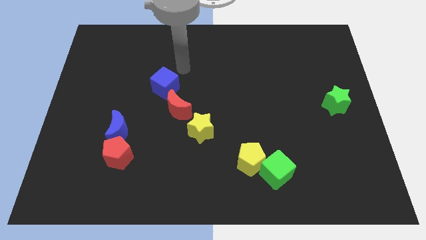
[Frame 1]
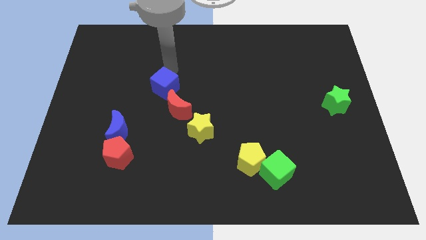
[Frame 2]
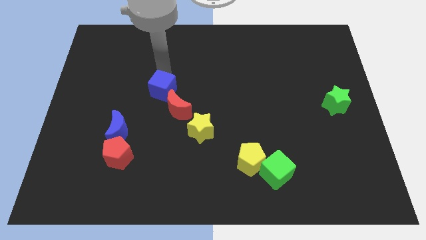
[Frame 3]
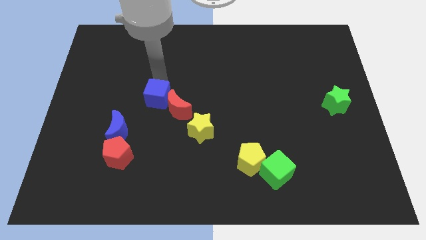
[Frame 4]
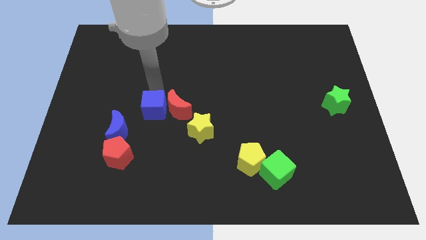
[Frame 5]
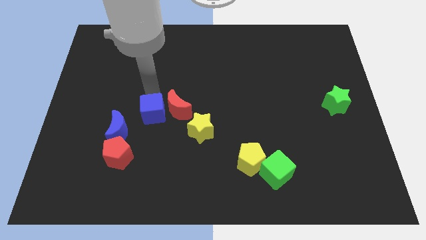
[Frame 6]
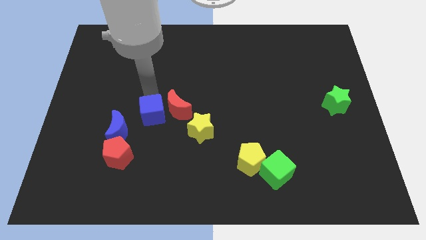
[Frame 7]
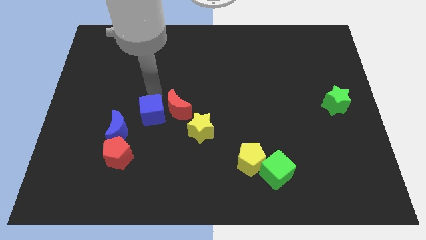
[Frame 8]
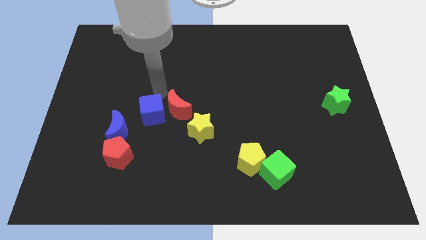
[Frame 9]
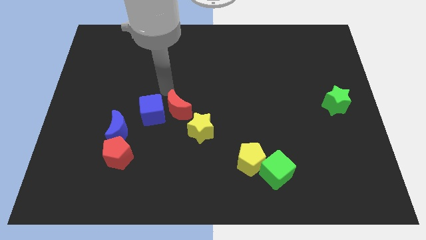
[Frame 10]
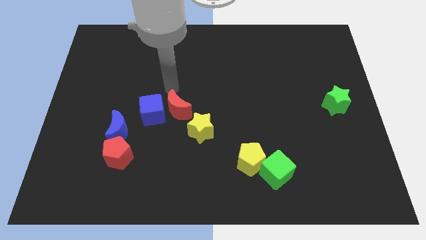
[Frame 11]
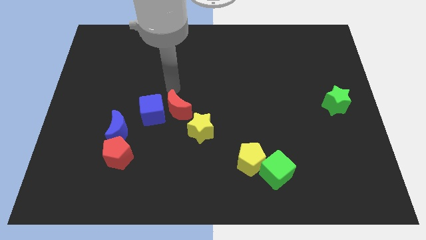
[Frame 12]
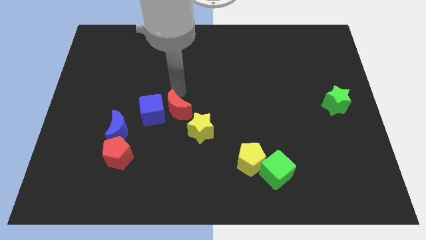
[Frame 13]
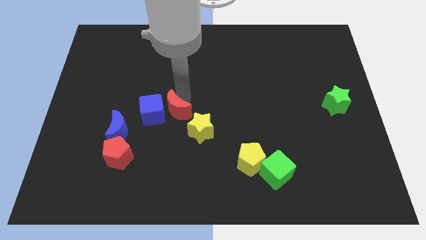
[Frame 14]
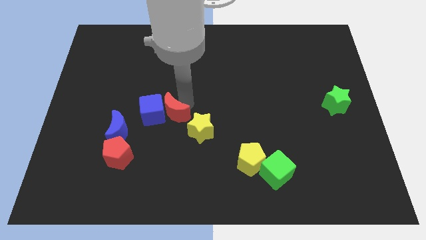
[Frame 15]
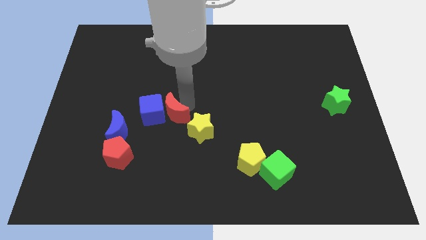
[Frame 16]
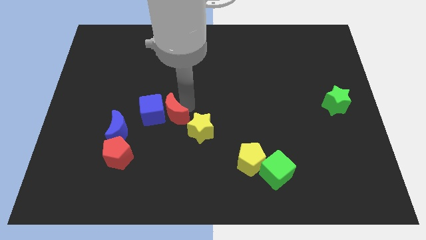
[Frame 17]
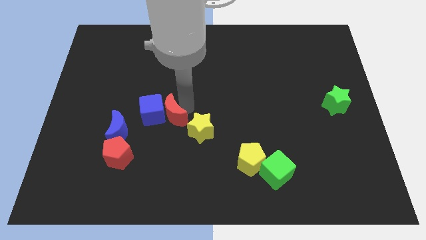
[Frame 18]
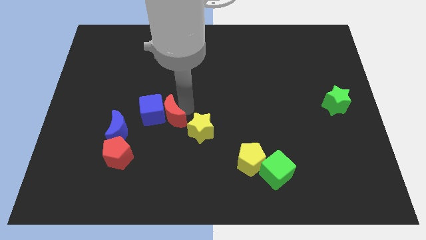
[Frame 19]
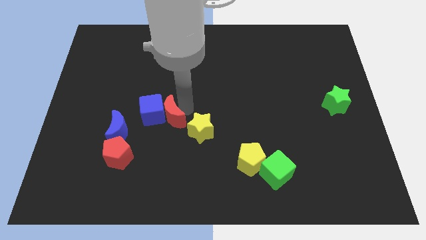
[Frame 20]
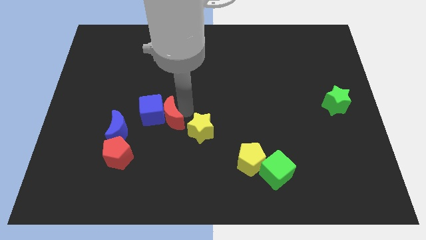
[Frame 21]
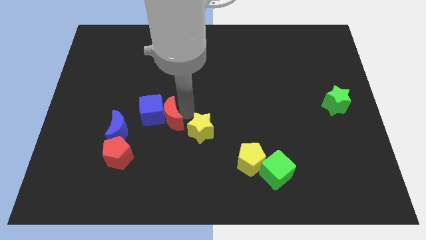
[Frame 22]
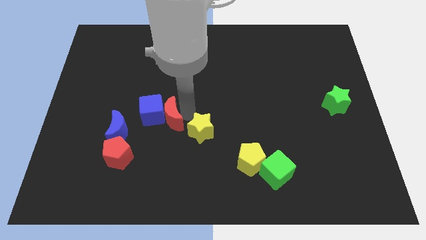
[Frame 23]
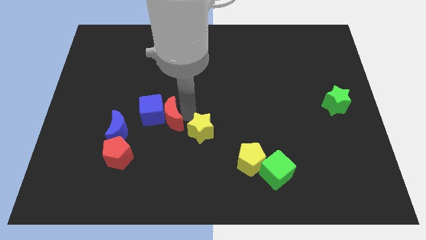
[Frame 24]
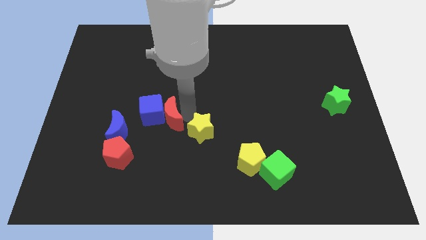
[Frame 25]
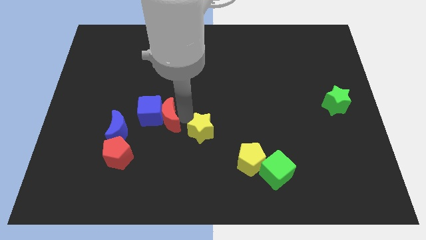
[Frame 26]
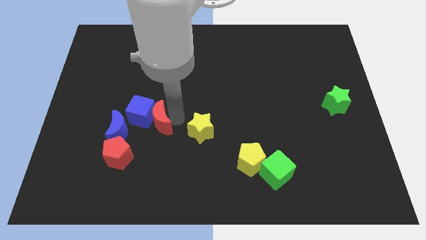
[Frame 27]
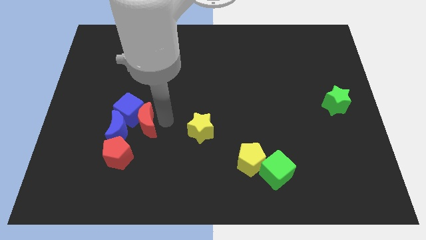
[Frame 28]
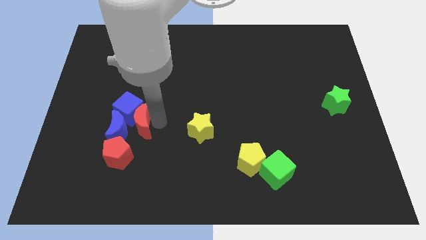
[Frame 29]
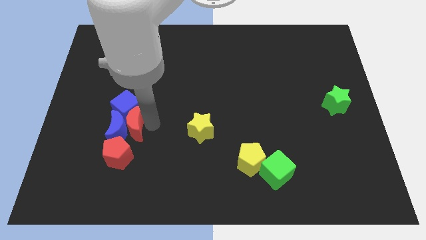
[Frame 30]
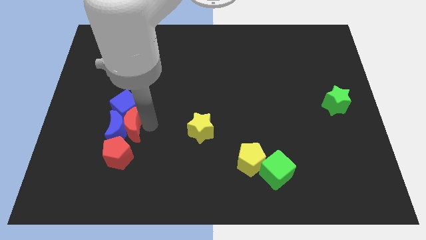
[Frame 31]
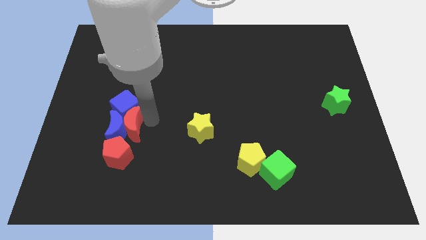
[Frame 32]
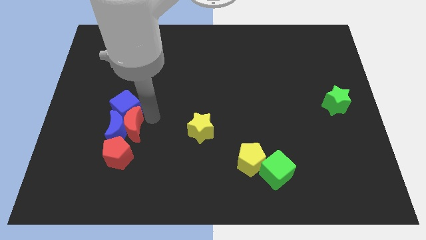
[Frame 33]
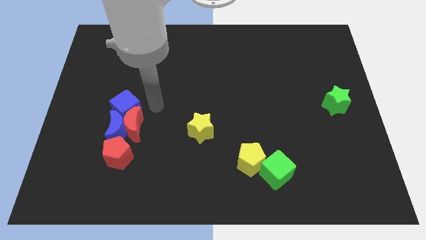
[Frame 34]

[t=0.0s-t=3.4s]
move the red moon to the right of the blue moon

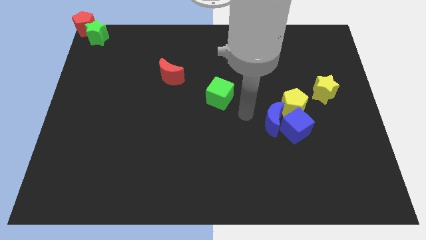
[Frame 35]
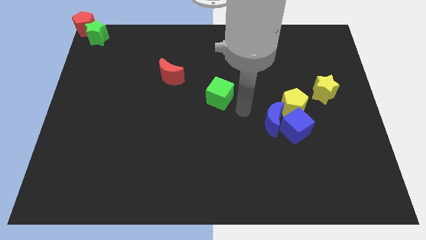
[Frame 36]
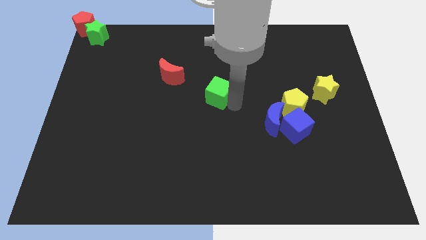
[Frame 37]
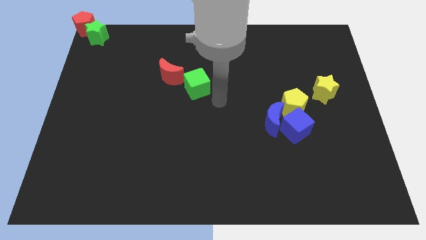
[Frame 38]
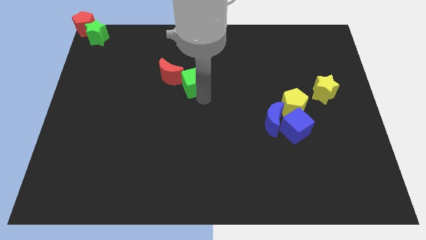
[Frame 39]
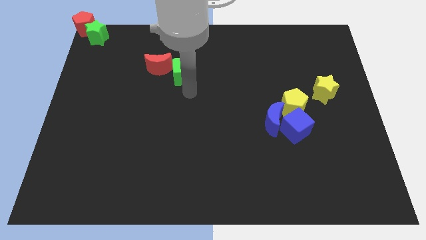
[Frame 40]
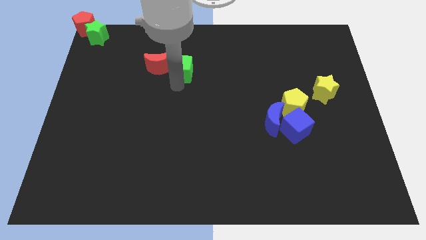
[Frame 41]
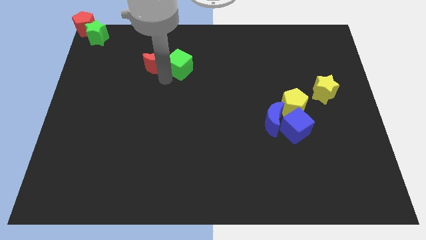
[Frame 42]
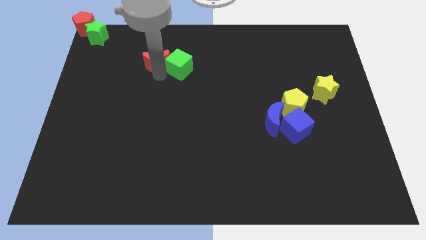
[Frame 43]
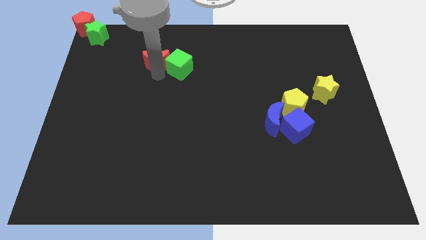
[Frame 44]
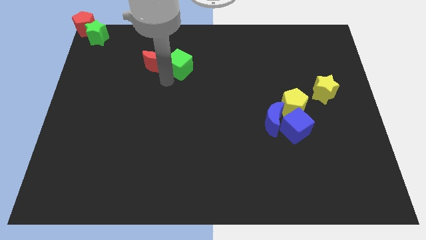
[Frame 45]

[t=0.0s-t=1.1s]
push the green cube to the right of the red crescent

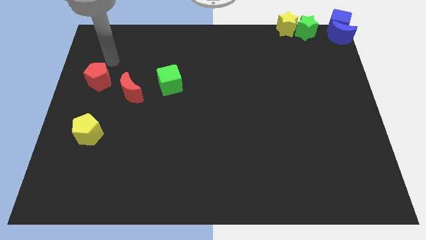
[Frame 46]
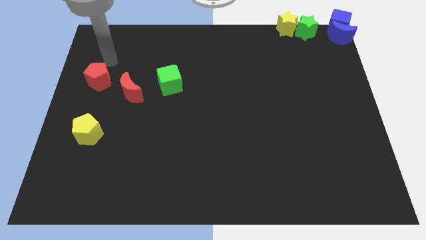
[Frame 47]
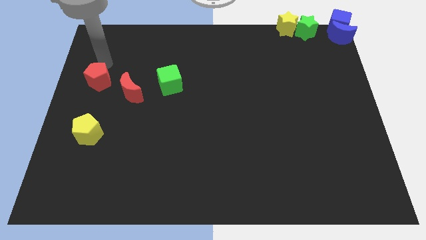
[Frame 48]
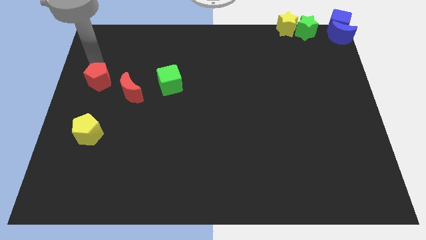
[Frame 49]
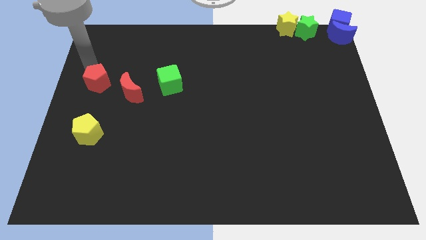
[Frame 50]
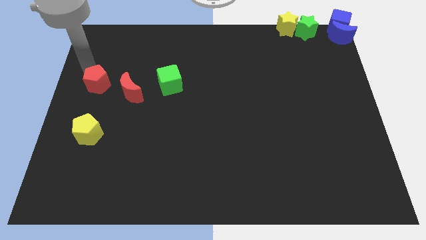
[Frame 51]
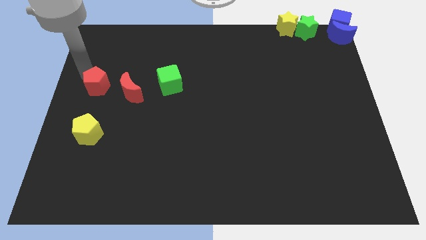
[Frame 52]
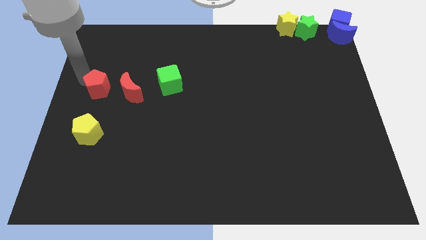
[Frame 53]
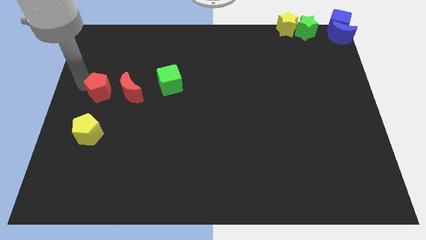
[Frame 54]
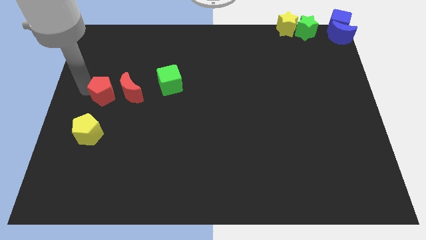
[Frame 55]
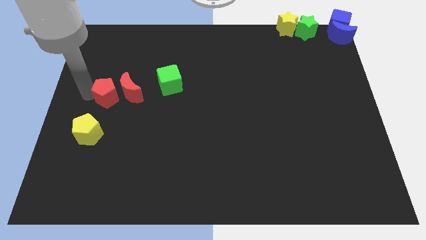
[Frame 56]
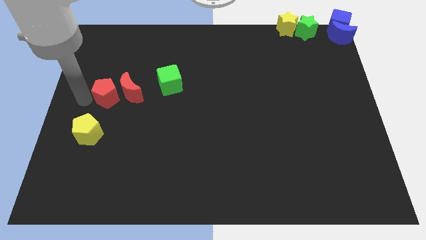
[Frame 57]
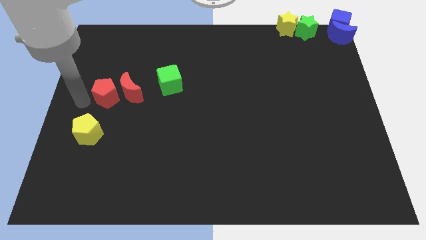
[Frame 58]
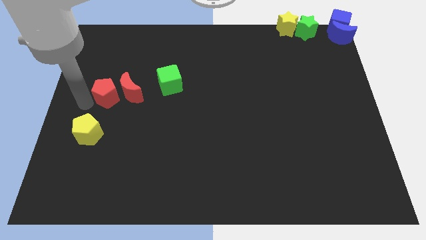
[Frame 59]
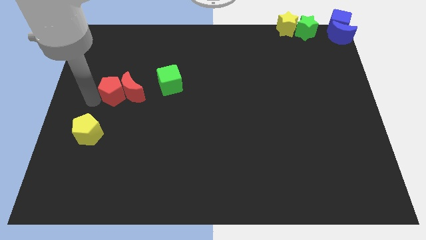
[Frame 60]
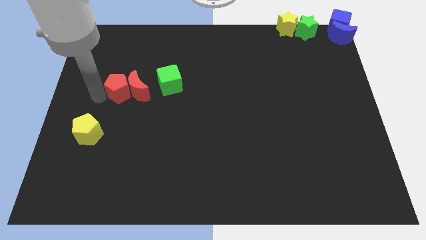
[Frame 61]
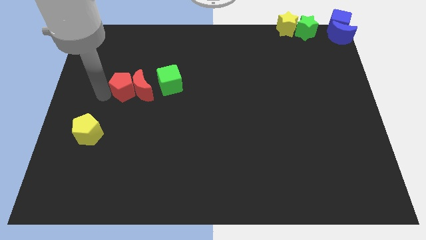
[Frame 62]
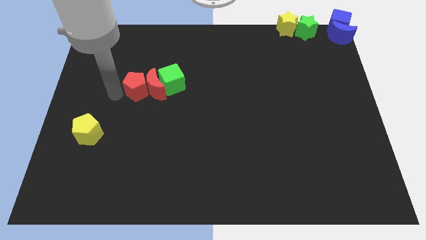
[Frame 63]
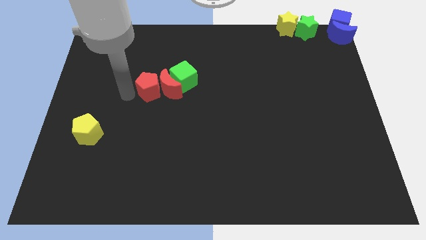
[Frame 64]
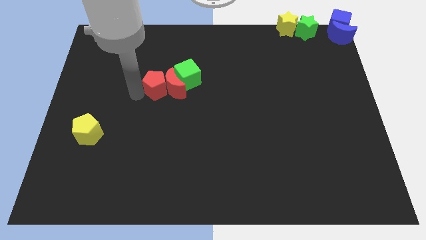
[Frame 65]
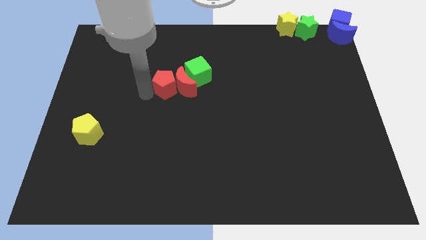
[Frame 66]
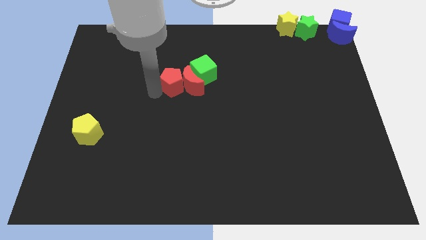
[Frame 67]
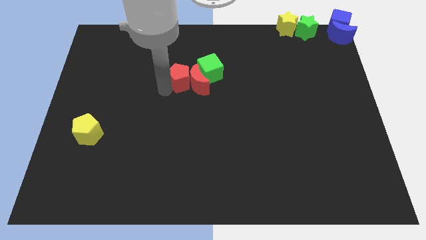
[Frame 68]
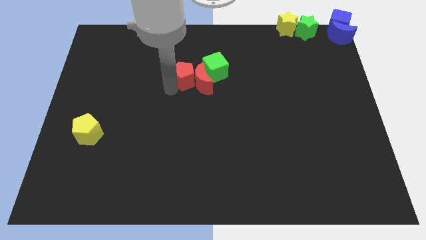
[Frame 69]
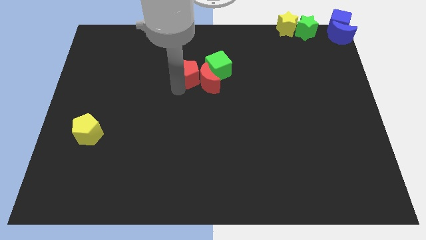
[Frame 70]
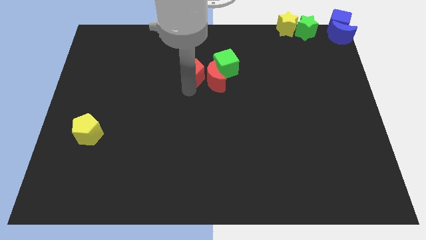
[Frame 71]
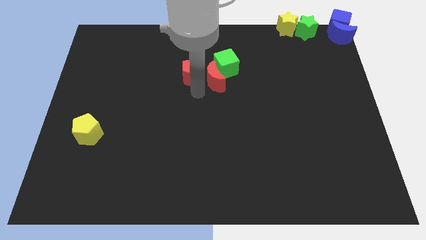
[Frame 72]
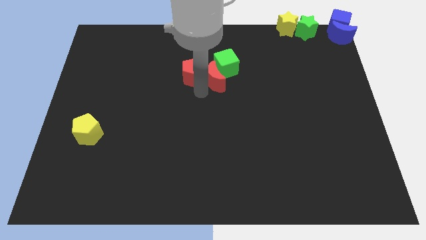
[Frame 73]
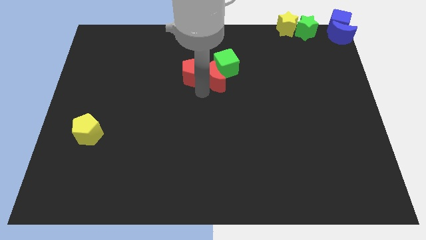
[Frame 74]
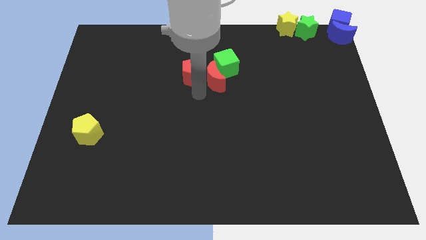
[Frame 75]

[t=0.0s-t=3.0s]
move the green cube and red crescent towards right side of the board using red pentagon

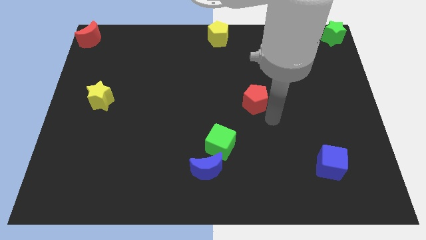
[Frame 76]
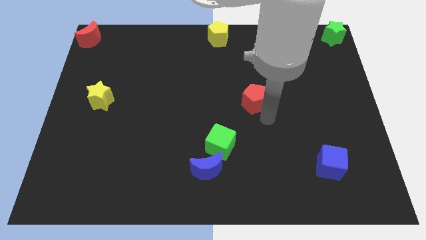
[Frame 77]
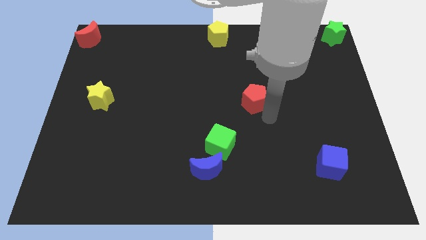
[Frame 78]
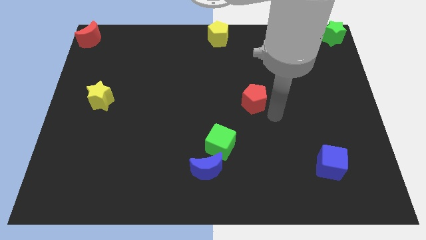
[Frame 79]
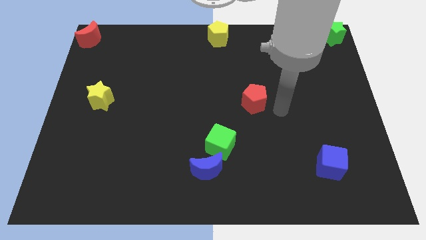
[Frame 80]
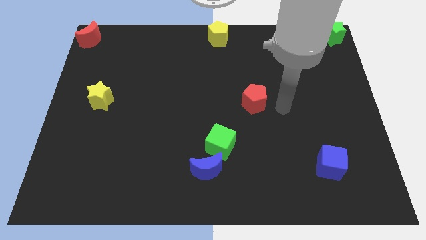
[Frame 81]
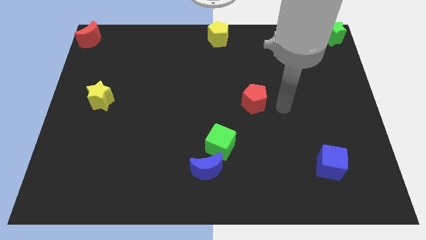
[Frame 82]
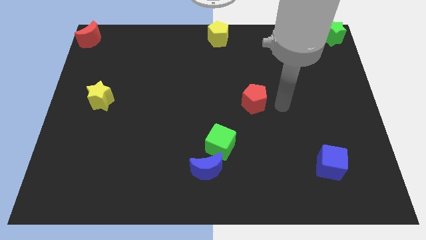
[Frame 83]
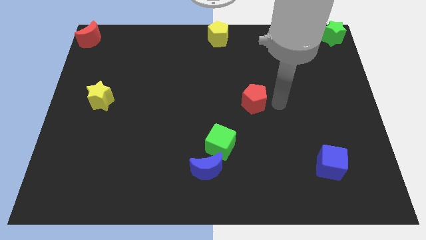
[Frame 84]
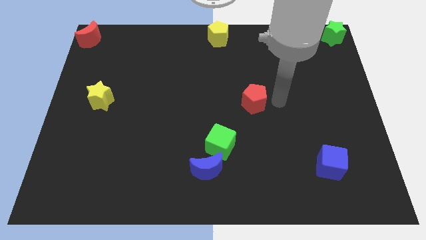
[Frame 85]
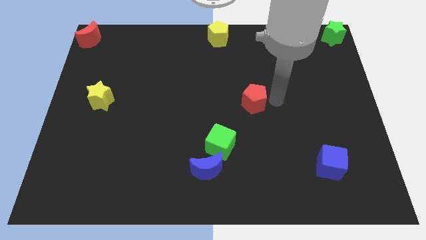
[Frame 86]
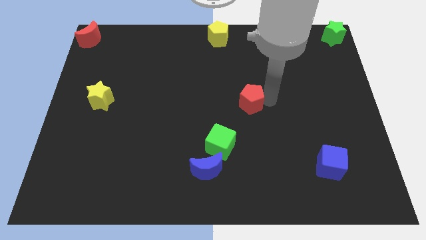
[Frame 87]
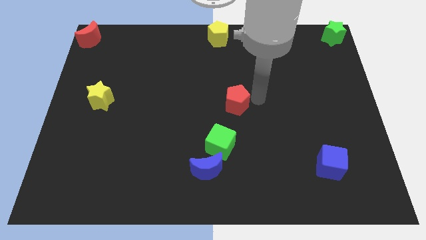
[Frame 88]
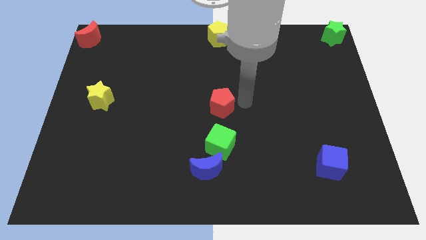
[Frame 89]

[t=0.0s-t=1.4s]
place the red pentagon to the top of green cube

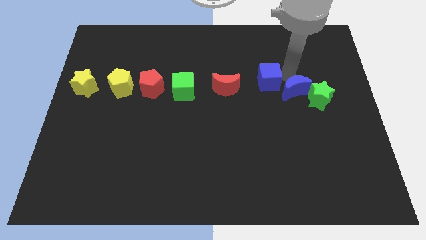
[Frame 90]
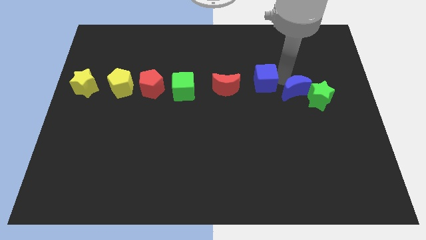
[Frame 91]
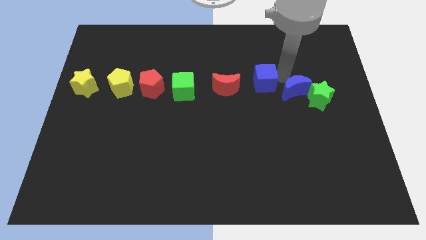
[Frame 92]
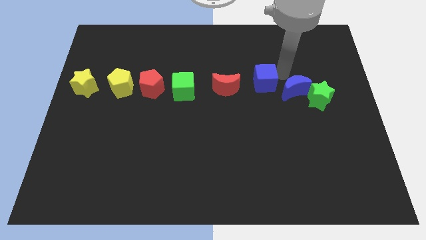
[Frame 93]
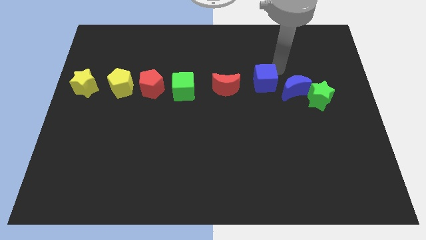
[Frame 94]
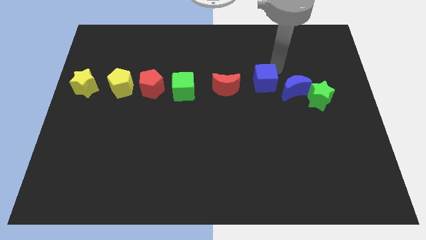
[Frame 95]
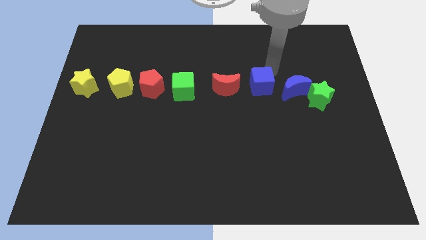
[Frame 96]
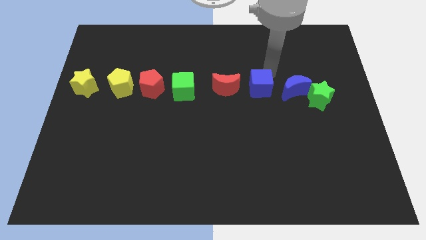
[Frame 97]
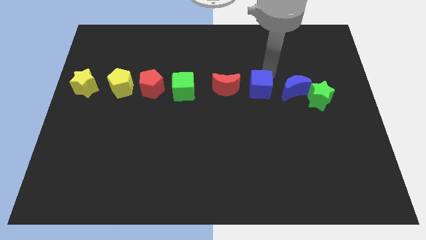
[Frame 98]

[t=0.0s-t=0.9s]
push the blue cube to the right of the red crescent
